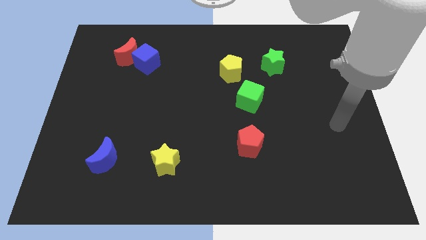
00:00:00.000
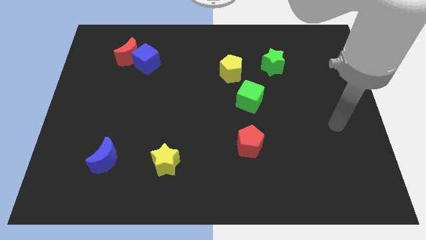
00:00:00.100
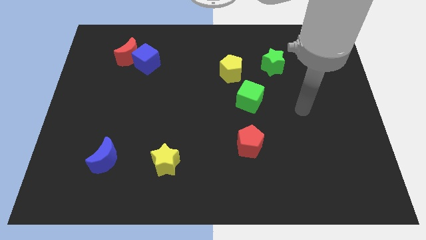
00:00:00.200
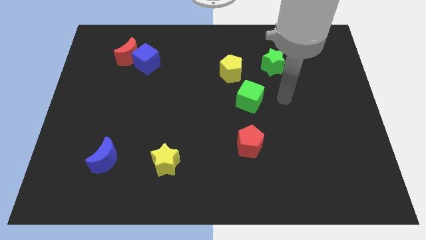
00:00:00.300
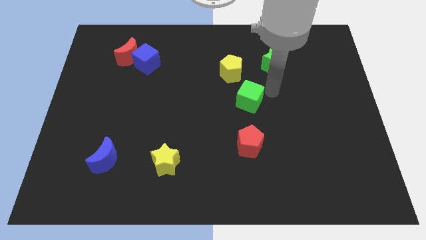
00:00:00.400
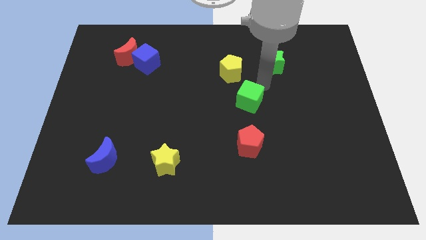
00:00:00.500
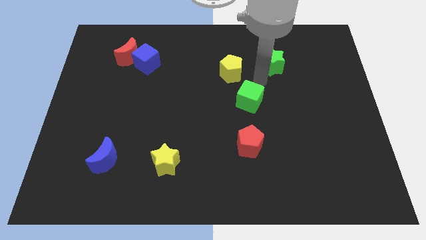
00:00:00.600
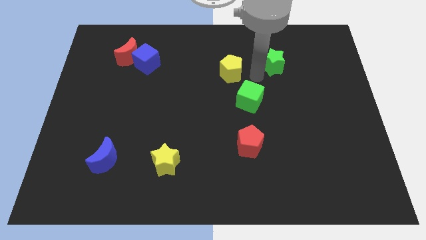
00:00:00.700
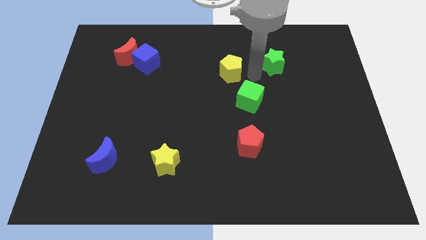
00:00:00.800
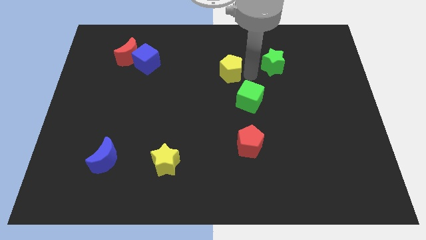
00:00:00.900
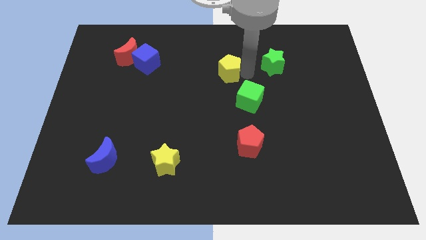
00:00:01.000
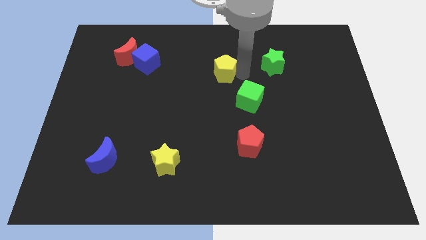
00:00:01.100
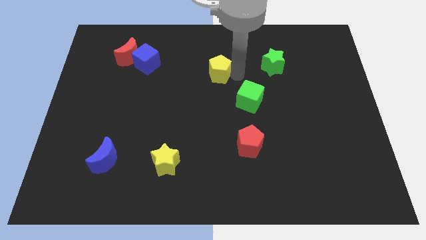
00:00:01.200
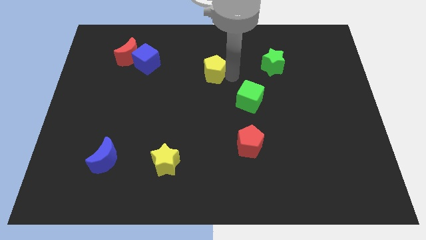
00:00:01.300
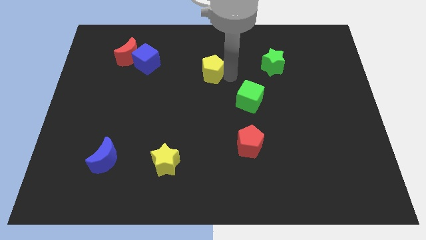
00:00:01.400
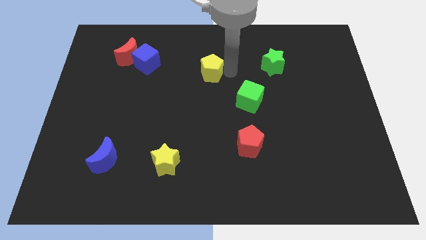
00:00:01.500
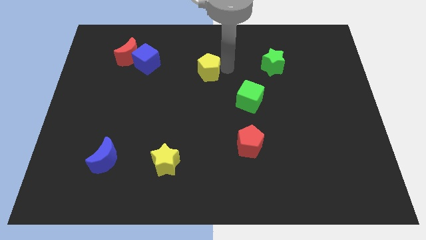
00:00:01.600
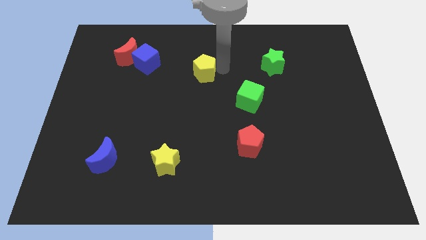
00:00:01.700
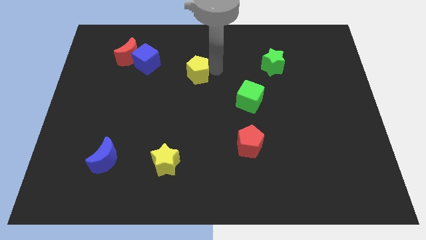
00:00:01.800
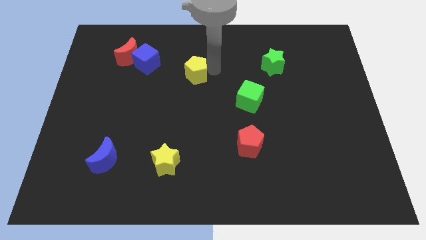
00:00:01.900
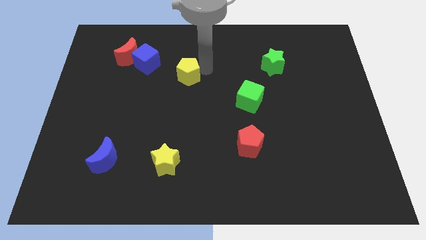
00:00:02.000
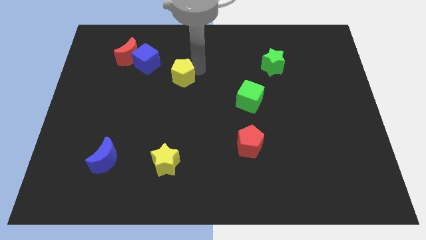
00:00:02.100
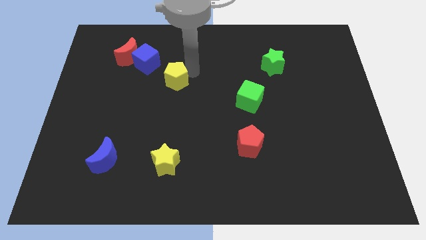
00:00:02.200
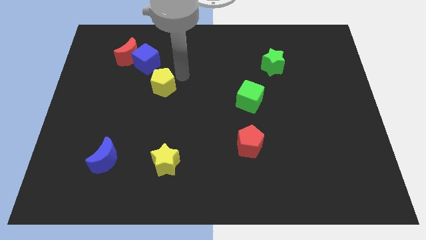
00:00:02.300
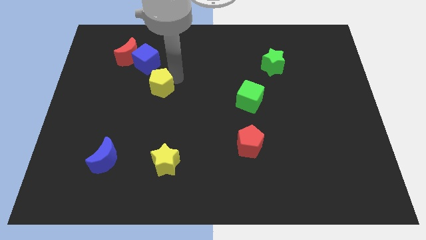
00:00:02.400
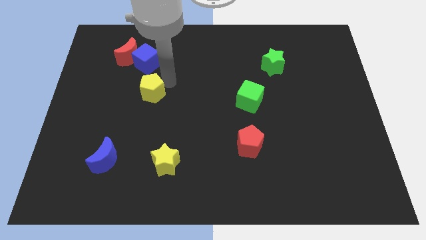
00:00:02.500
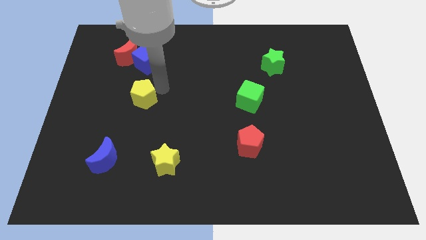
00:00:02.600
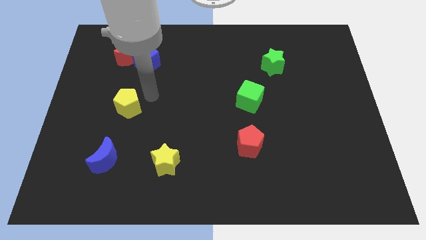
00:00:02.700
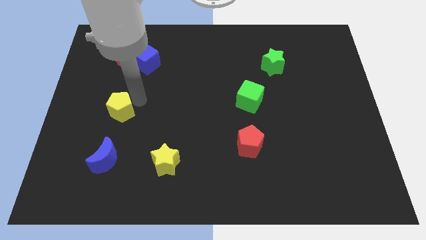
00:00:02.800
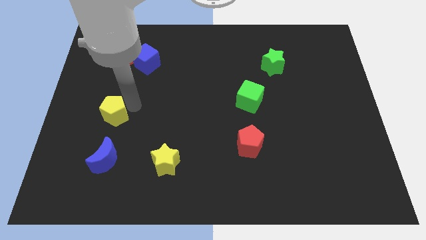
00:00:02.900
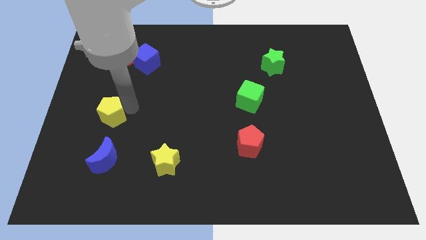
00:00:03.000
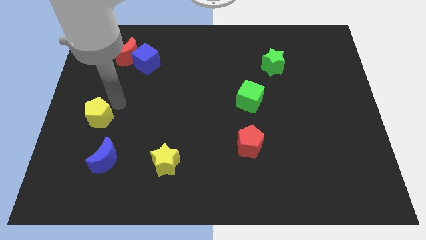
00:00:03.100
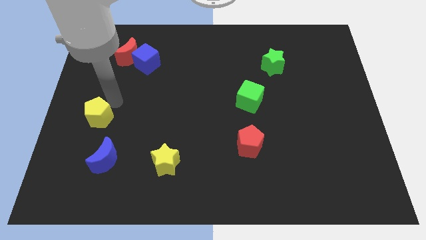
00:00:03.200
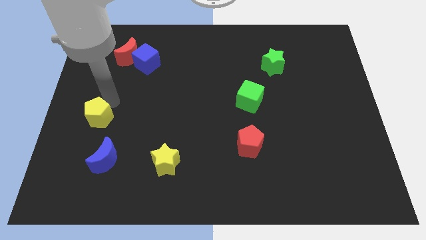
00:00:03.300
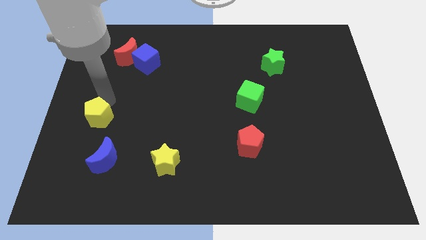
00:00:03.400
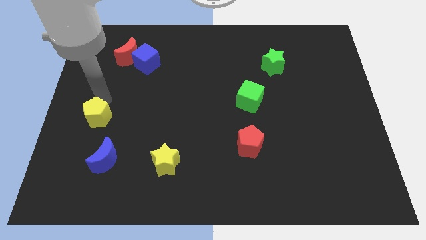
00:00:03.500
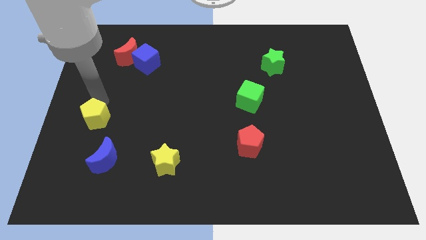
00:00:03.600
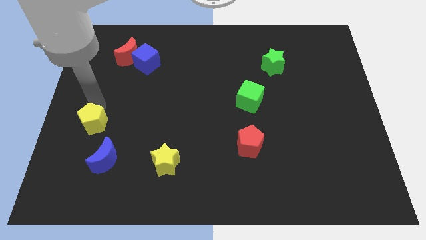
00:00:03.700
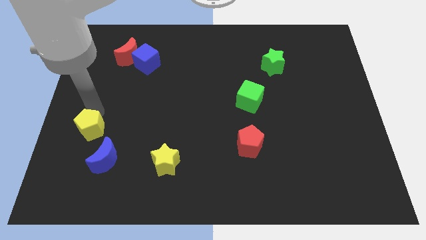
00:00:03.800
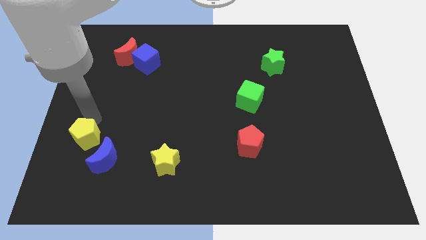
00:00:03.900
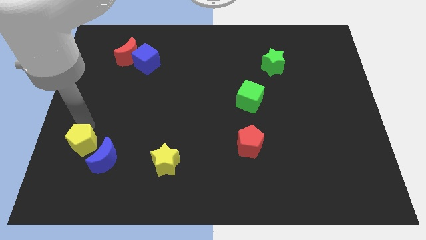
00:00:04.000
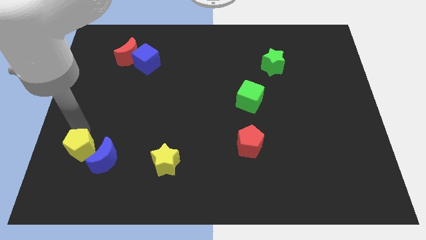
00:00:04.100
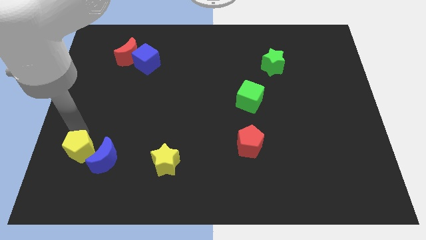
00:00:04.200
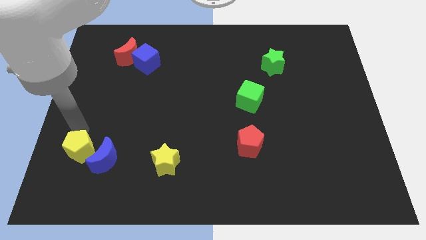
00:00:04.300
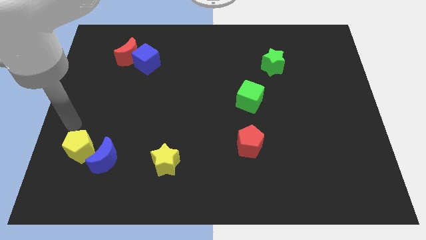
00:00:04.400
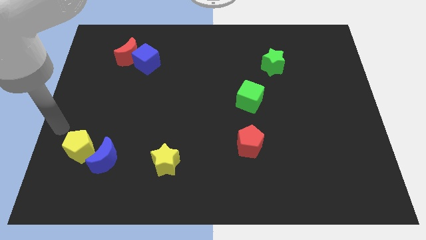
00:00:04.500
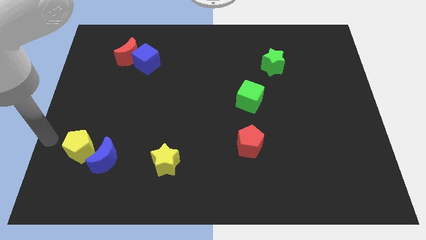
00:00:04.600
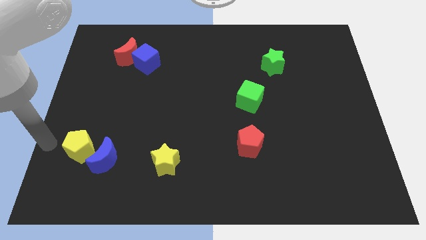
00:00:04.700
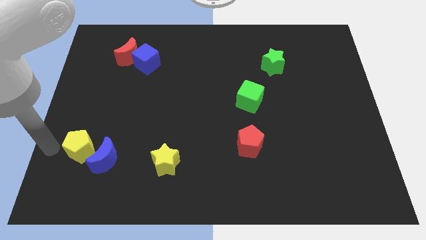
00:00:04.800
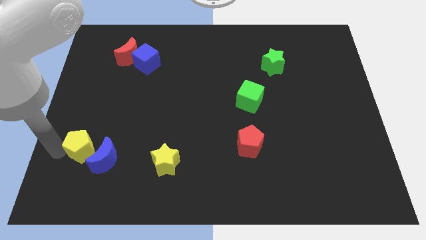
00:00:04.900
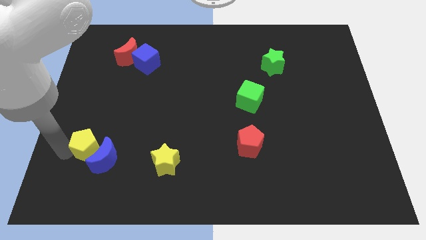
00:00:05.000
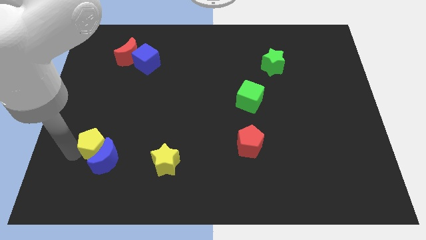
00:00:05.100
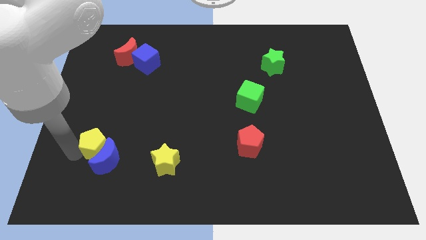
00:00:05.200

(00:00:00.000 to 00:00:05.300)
move the yellow pentagon next to the blue moon

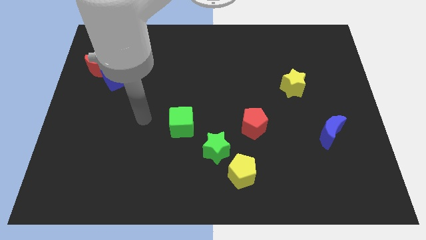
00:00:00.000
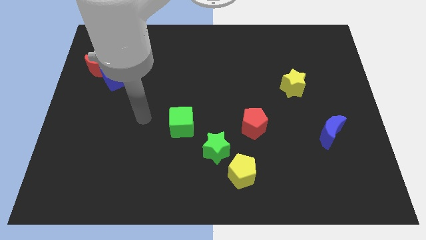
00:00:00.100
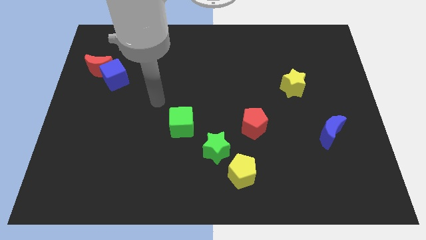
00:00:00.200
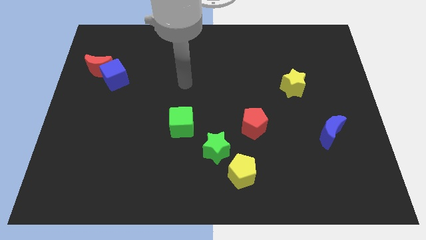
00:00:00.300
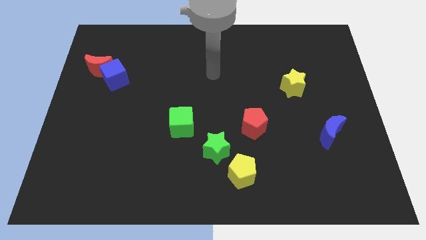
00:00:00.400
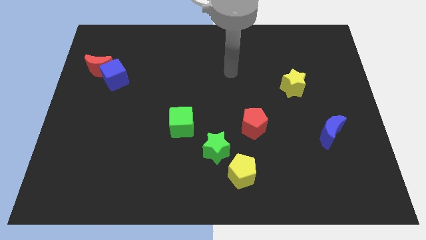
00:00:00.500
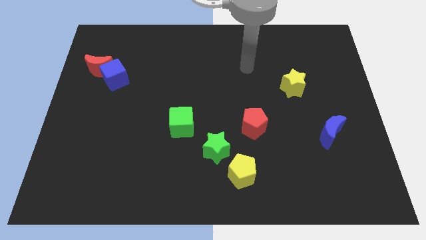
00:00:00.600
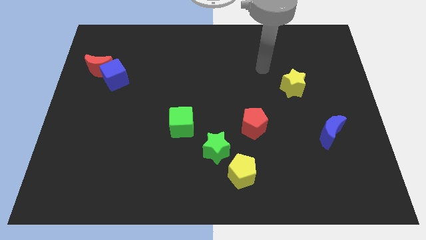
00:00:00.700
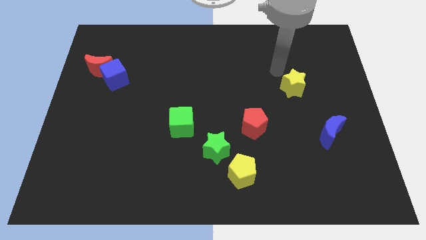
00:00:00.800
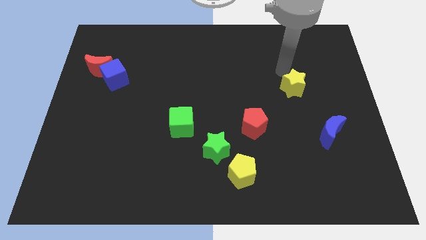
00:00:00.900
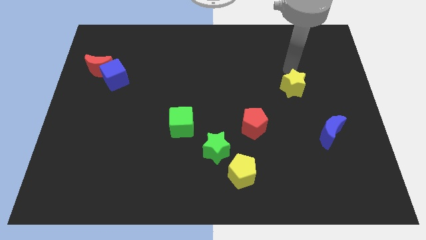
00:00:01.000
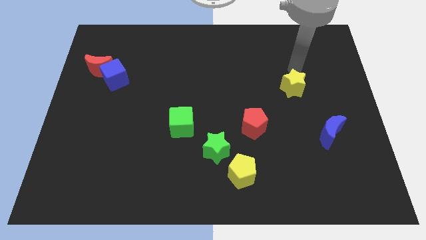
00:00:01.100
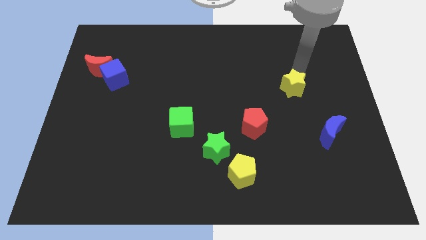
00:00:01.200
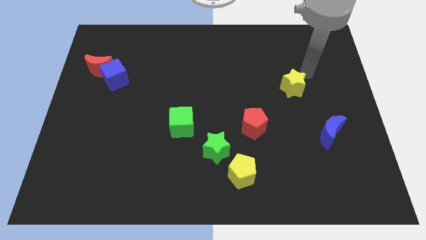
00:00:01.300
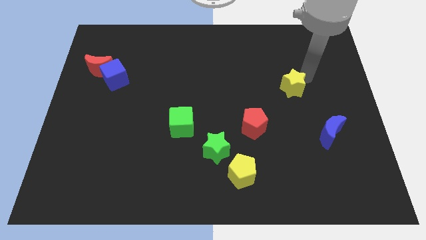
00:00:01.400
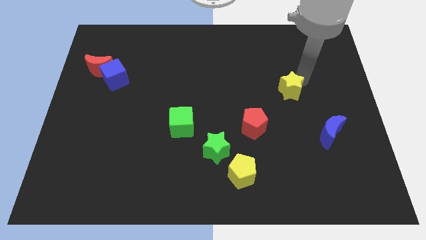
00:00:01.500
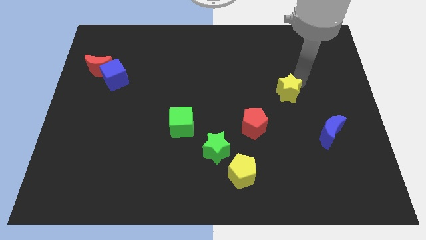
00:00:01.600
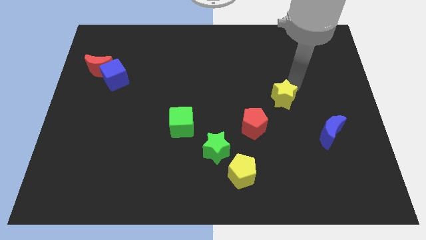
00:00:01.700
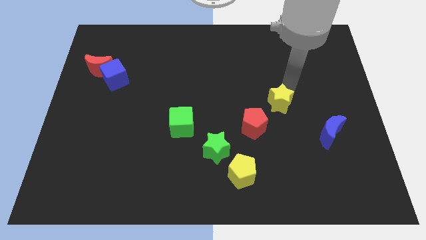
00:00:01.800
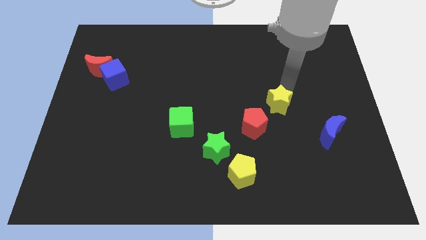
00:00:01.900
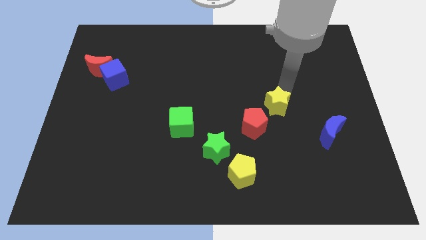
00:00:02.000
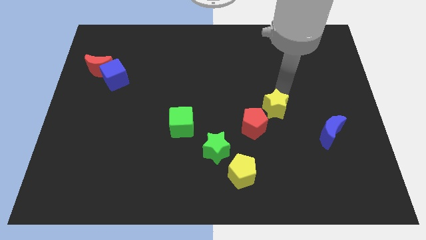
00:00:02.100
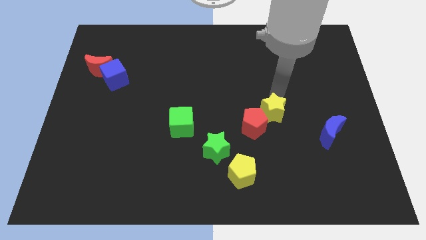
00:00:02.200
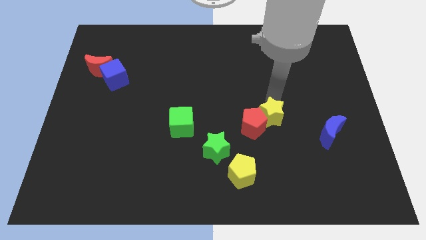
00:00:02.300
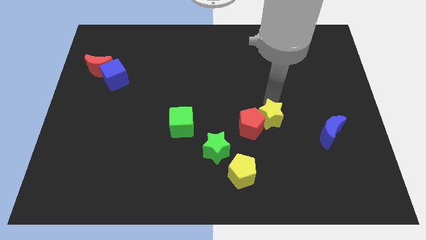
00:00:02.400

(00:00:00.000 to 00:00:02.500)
put the yellow star next to the red pentagon

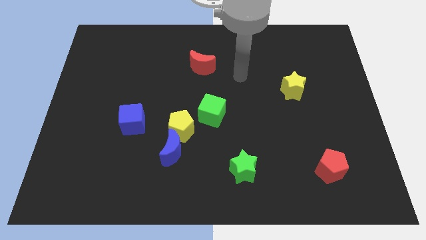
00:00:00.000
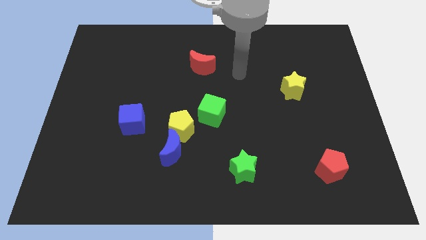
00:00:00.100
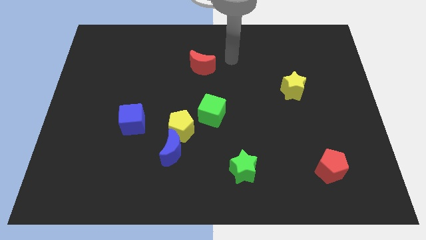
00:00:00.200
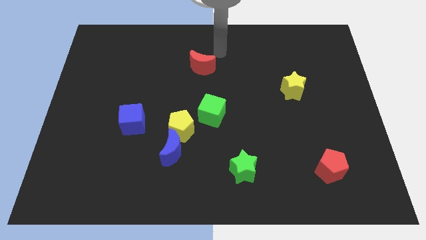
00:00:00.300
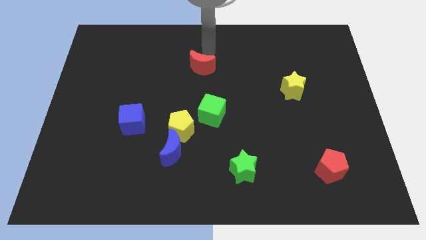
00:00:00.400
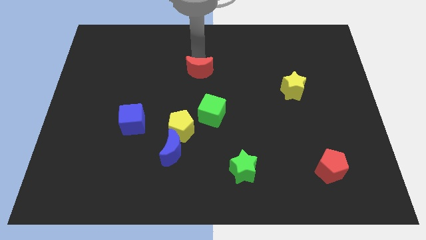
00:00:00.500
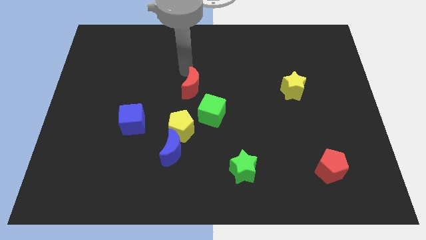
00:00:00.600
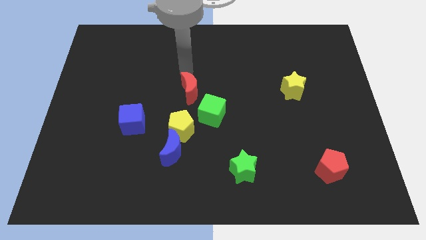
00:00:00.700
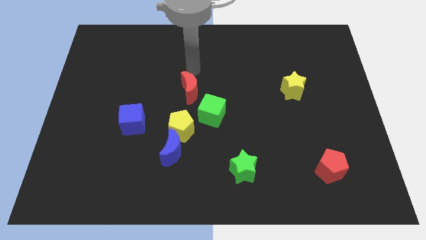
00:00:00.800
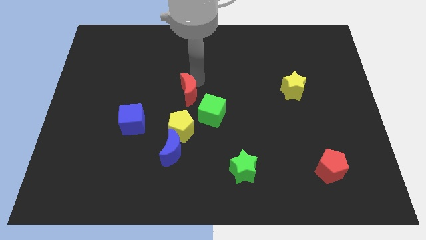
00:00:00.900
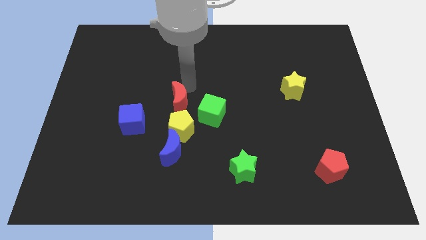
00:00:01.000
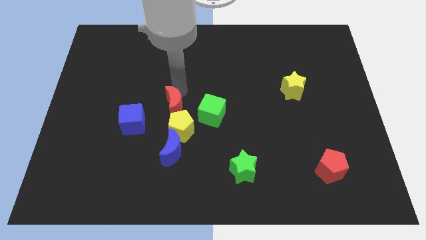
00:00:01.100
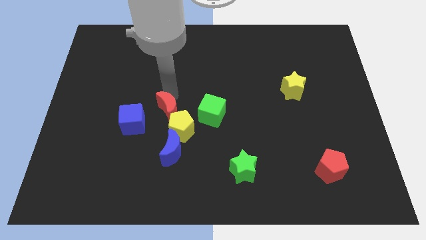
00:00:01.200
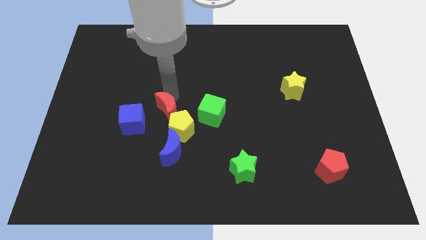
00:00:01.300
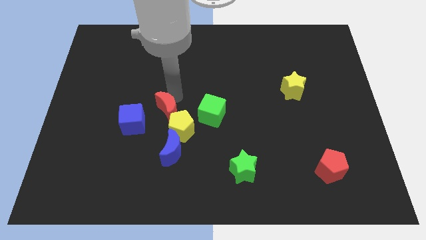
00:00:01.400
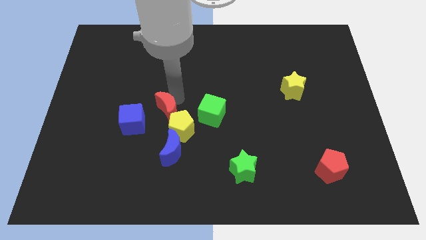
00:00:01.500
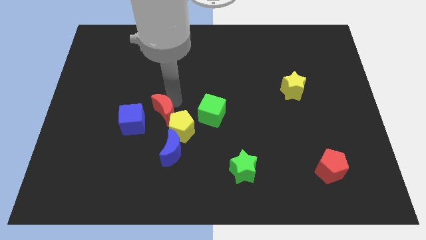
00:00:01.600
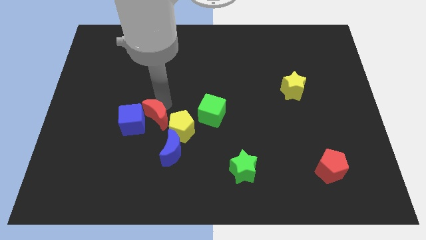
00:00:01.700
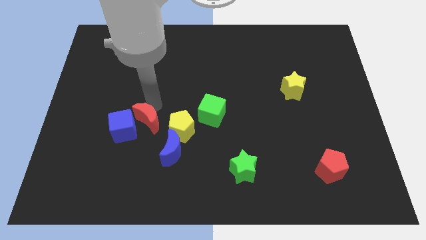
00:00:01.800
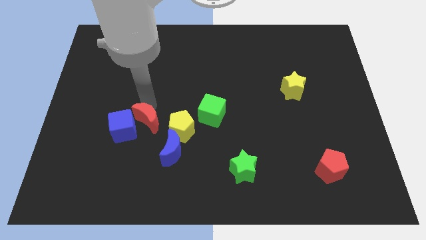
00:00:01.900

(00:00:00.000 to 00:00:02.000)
slide the red moon close to the blue cube
